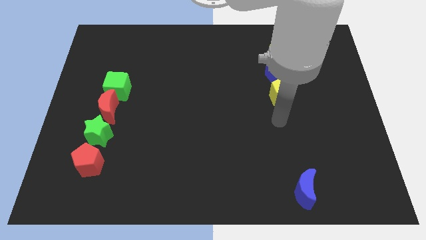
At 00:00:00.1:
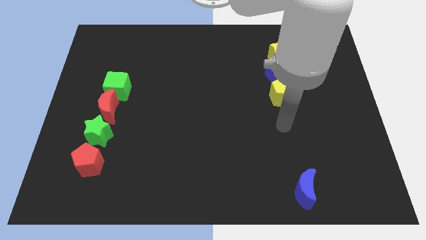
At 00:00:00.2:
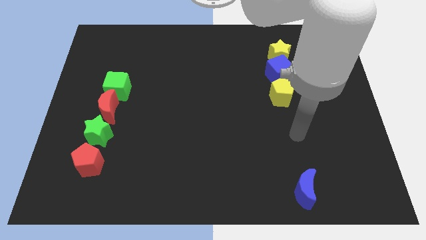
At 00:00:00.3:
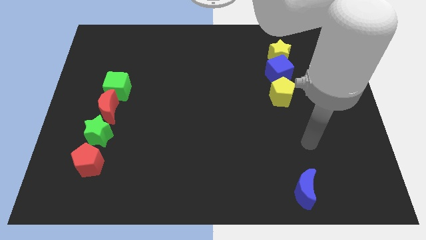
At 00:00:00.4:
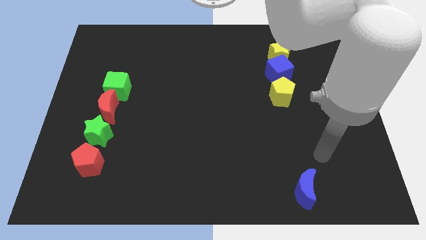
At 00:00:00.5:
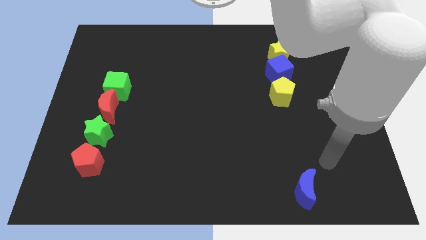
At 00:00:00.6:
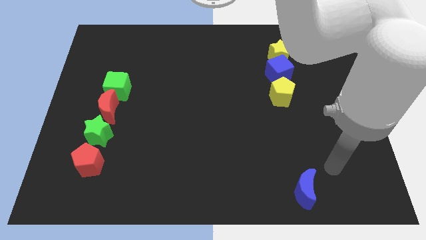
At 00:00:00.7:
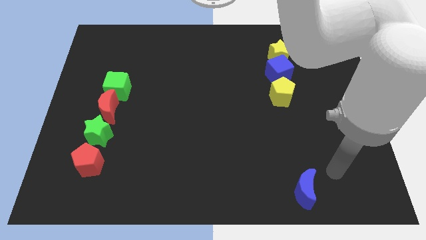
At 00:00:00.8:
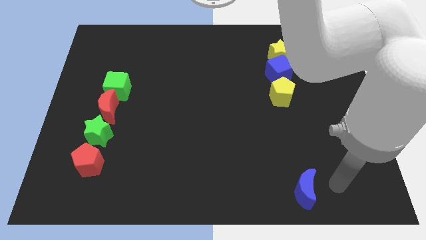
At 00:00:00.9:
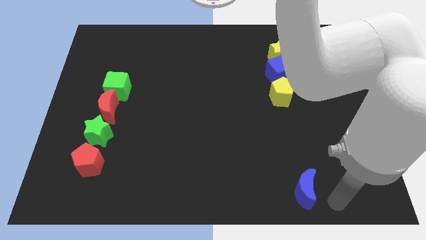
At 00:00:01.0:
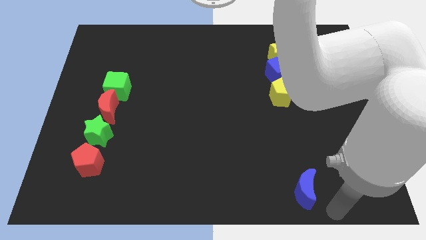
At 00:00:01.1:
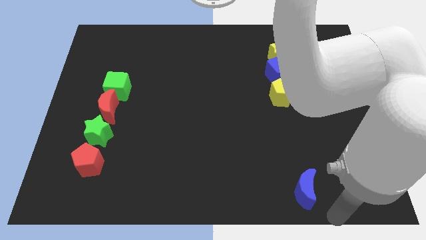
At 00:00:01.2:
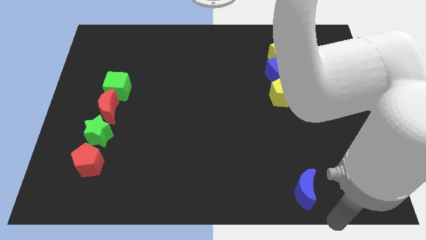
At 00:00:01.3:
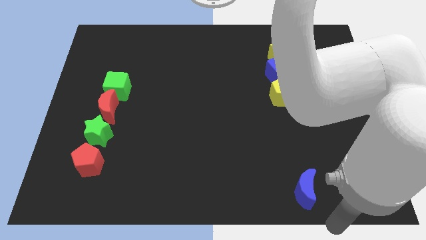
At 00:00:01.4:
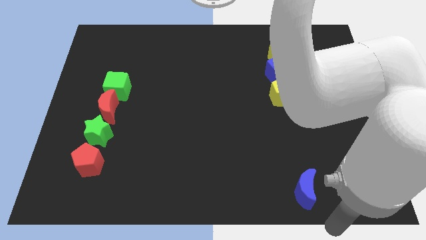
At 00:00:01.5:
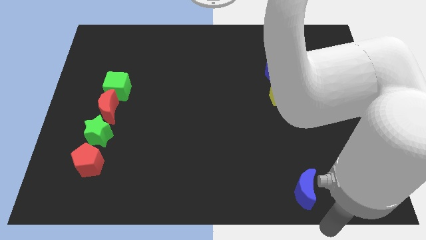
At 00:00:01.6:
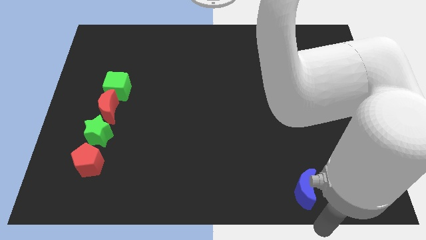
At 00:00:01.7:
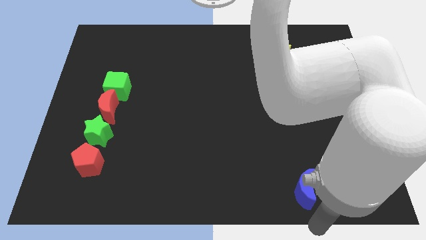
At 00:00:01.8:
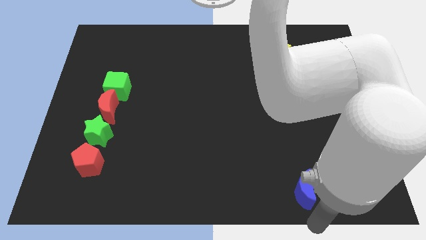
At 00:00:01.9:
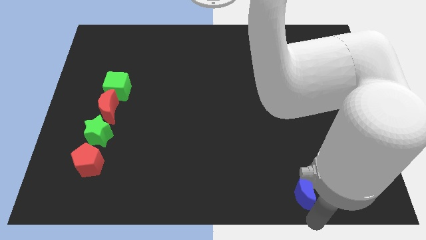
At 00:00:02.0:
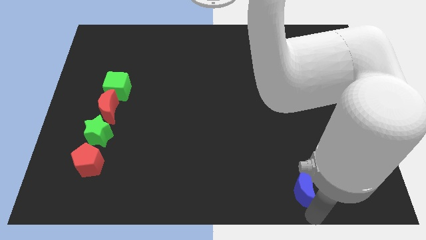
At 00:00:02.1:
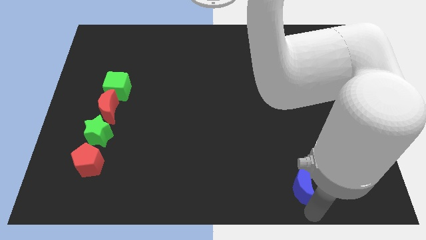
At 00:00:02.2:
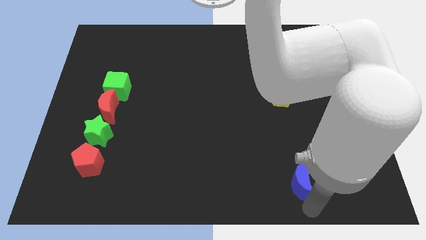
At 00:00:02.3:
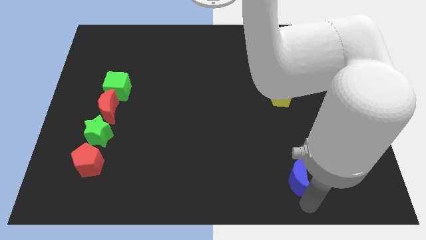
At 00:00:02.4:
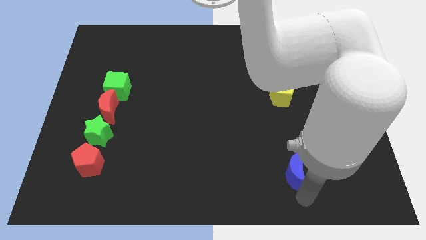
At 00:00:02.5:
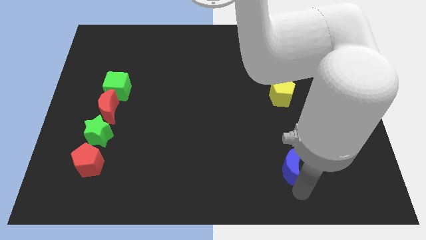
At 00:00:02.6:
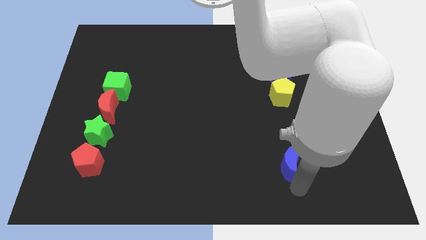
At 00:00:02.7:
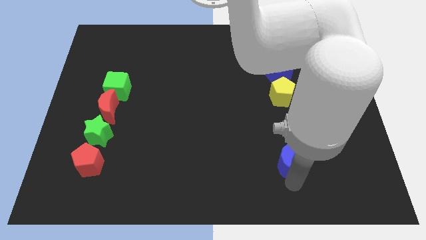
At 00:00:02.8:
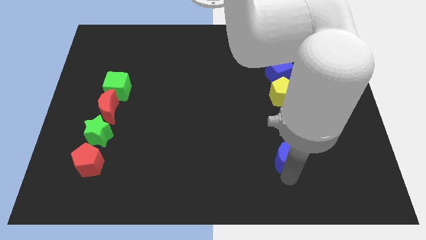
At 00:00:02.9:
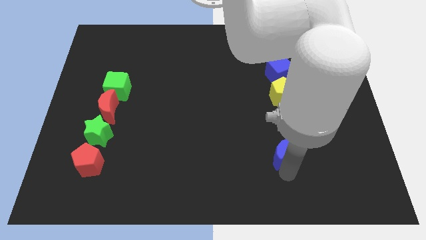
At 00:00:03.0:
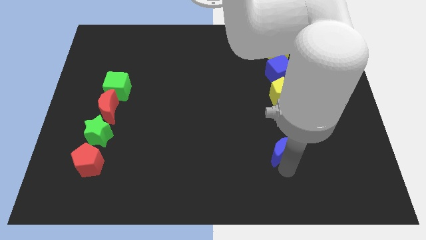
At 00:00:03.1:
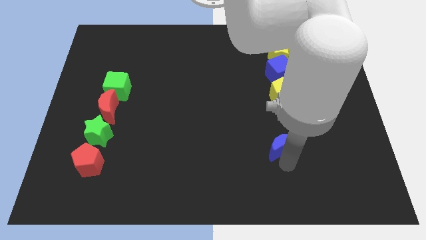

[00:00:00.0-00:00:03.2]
push the blue moon upward

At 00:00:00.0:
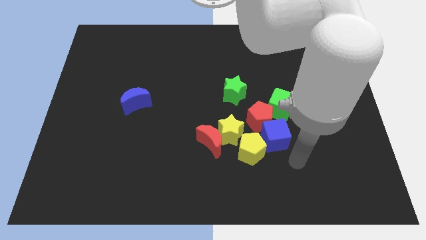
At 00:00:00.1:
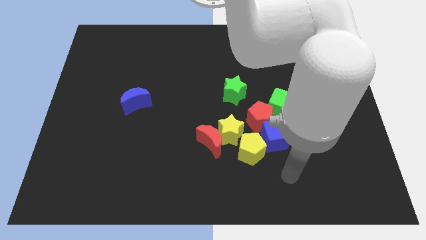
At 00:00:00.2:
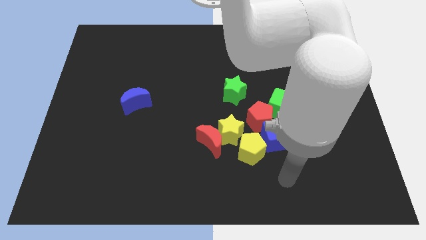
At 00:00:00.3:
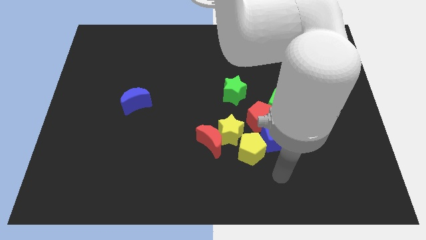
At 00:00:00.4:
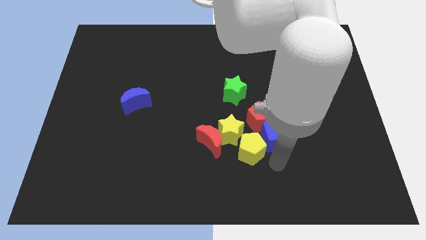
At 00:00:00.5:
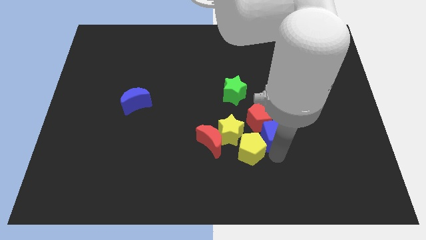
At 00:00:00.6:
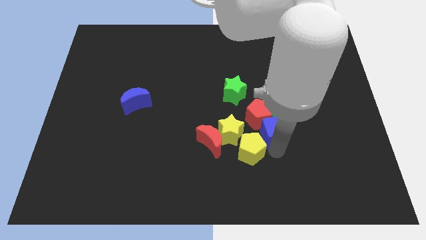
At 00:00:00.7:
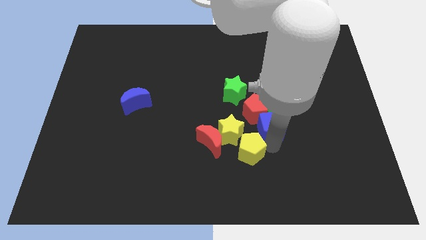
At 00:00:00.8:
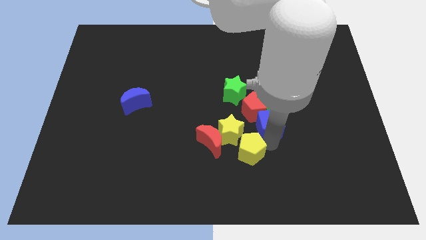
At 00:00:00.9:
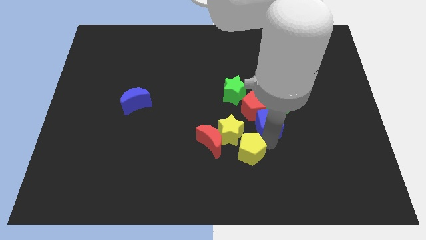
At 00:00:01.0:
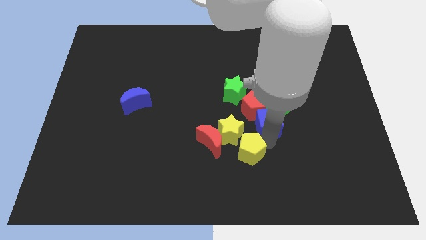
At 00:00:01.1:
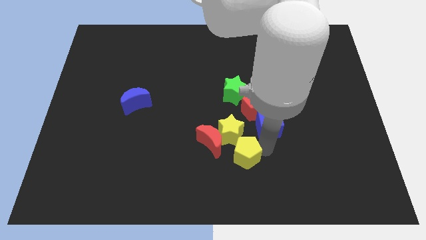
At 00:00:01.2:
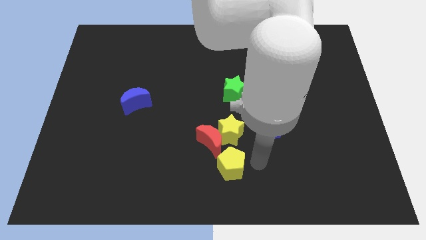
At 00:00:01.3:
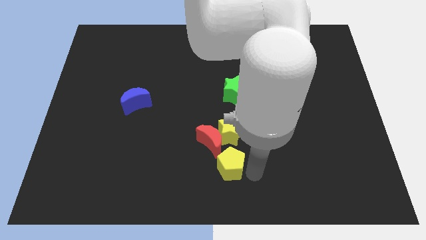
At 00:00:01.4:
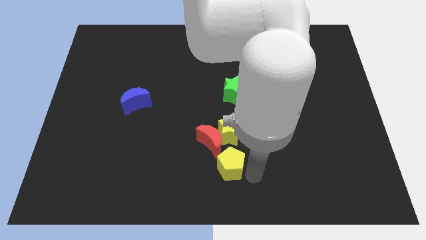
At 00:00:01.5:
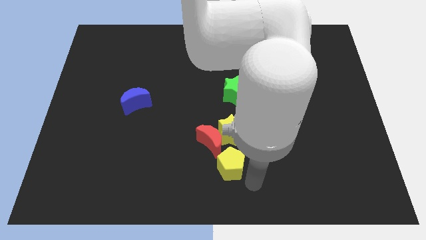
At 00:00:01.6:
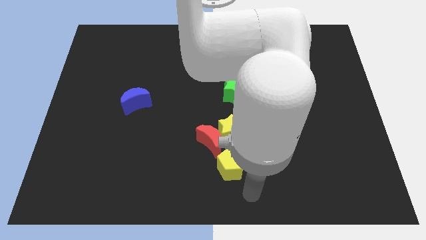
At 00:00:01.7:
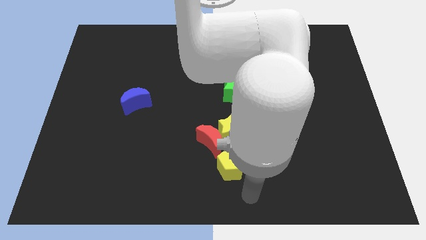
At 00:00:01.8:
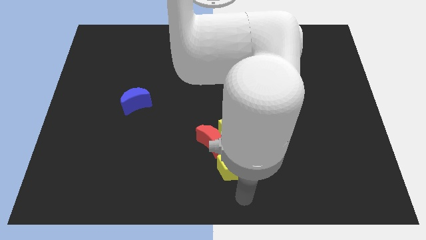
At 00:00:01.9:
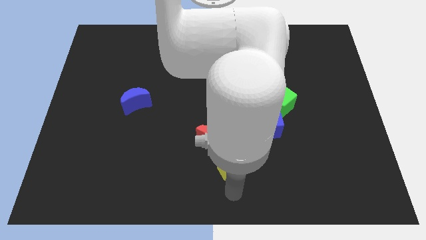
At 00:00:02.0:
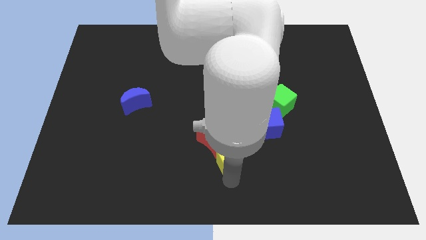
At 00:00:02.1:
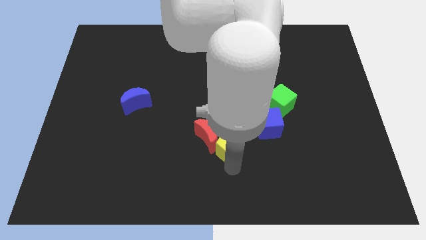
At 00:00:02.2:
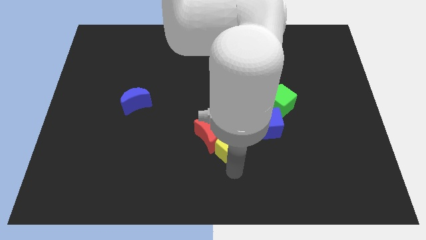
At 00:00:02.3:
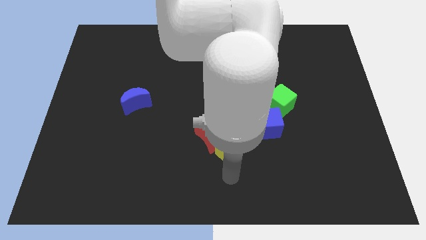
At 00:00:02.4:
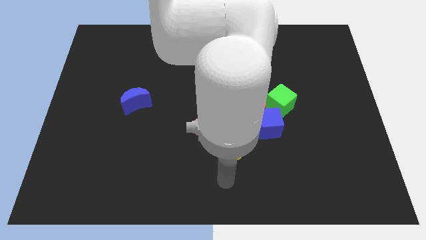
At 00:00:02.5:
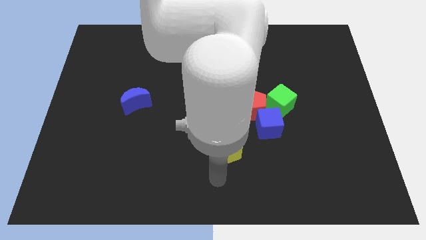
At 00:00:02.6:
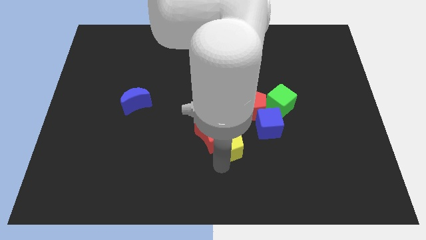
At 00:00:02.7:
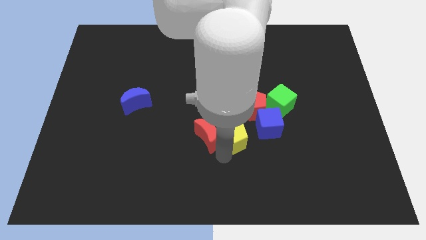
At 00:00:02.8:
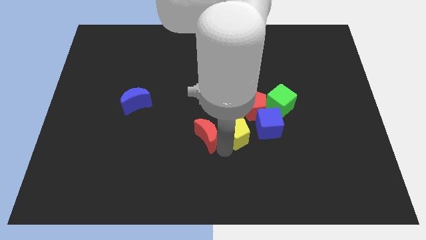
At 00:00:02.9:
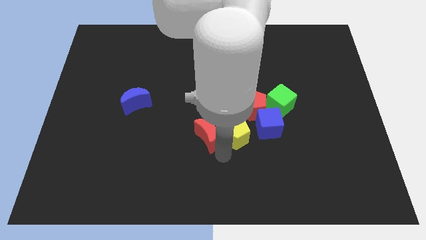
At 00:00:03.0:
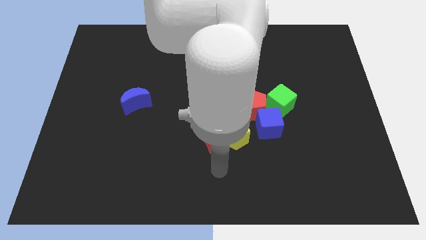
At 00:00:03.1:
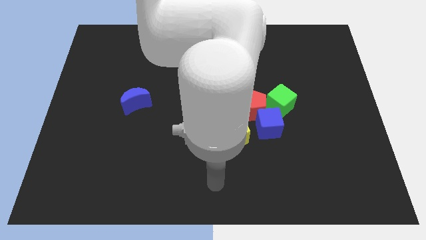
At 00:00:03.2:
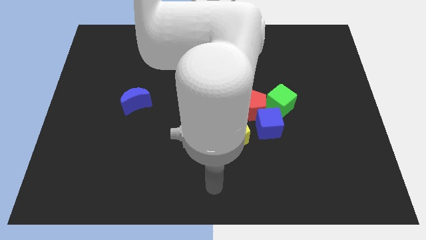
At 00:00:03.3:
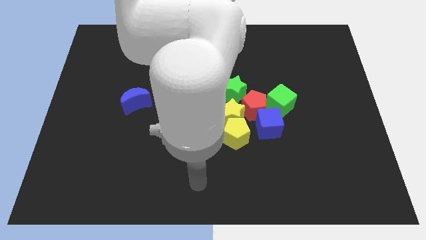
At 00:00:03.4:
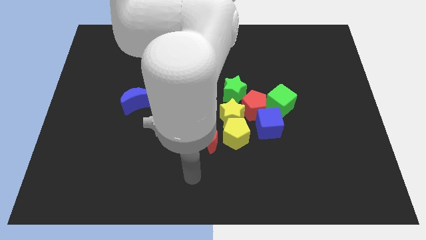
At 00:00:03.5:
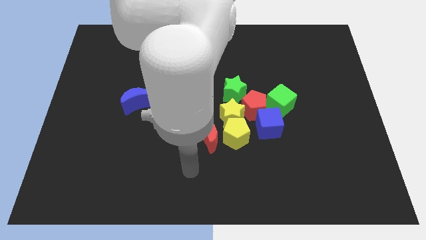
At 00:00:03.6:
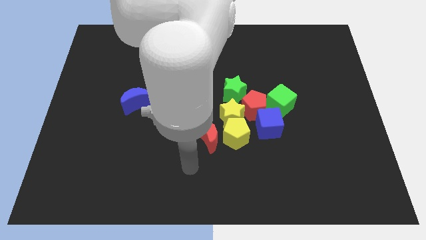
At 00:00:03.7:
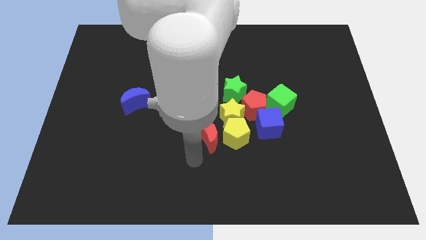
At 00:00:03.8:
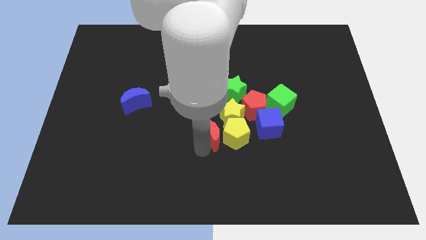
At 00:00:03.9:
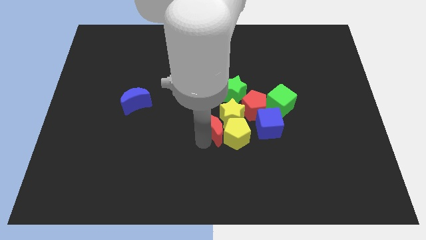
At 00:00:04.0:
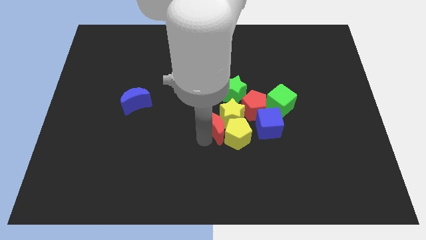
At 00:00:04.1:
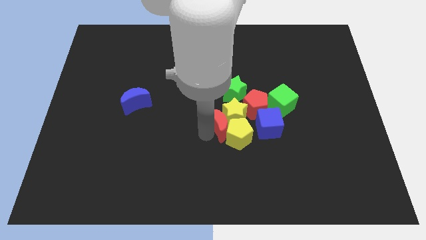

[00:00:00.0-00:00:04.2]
push the red pentagon close to yellow blocks

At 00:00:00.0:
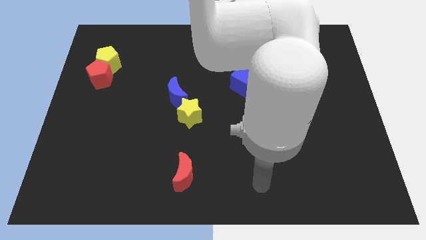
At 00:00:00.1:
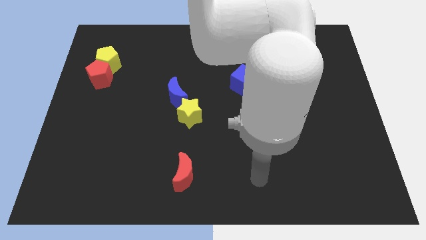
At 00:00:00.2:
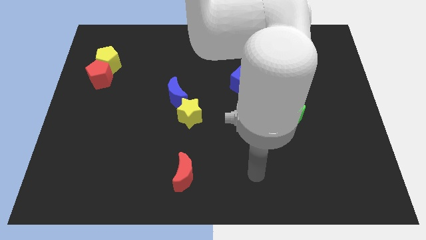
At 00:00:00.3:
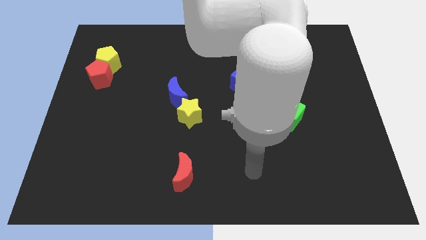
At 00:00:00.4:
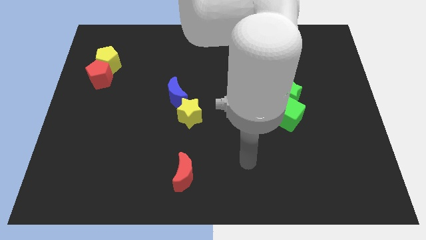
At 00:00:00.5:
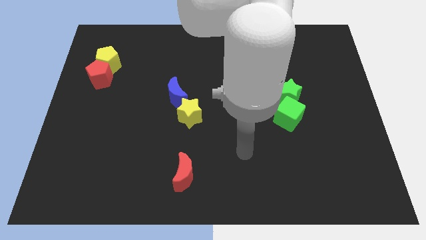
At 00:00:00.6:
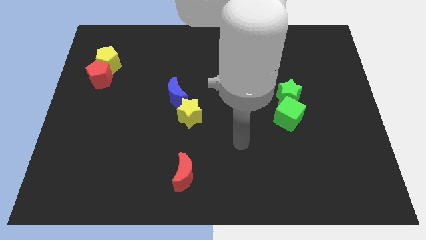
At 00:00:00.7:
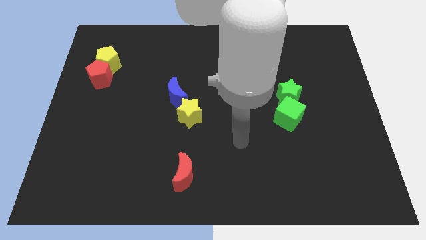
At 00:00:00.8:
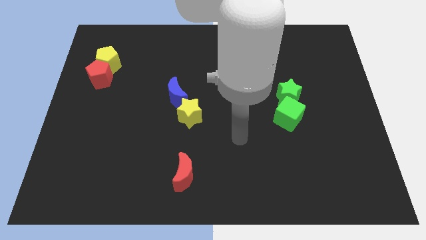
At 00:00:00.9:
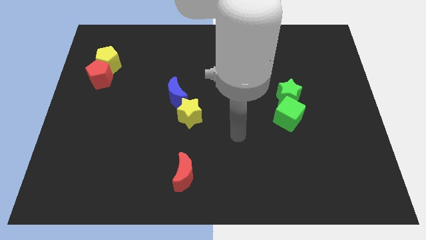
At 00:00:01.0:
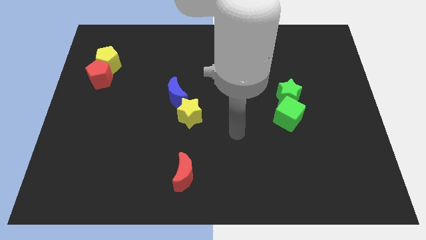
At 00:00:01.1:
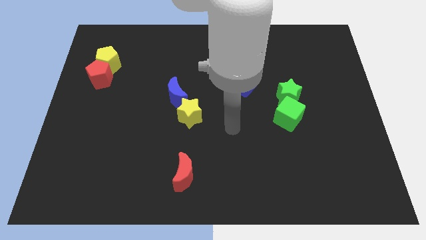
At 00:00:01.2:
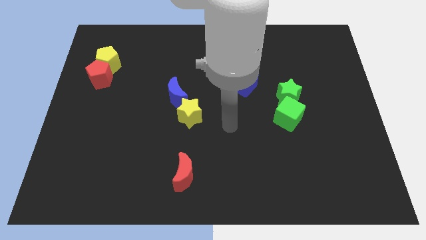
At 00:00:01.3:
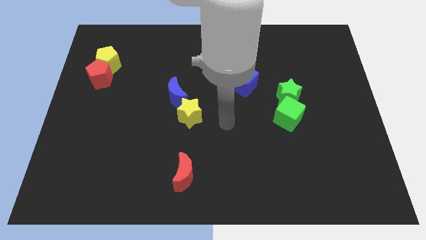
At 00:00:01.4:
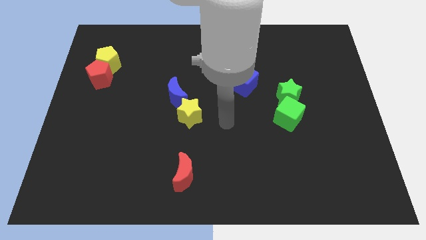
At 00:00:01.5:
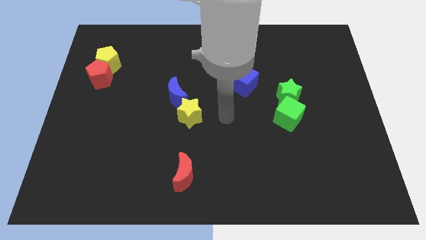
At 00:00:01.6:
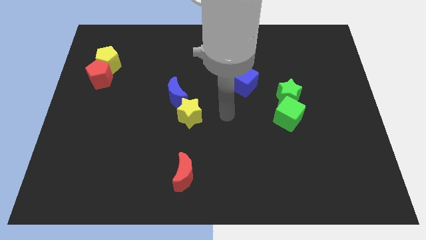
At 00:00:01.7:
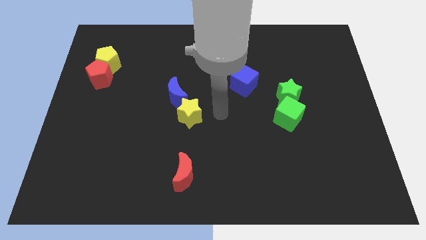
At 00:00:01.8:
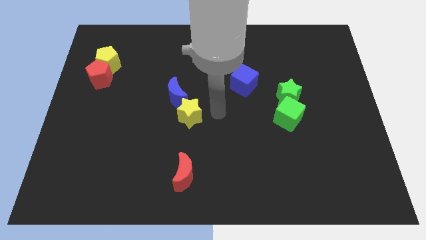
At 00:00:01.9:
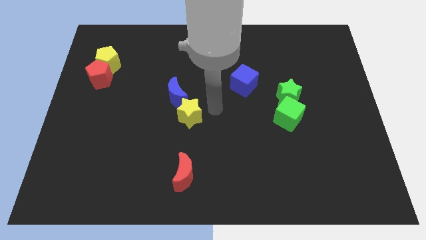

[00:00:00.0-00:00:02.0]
move the arm towards the yellow star
